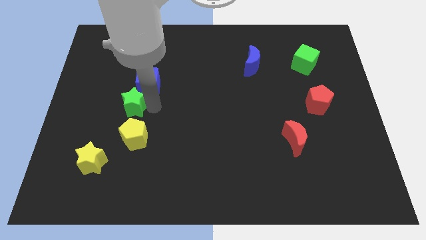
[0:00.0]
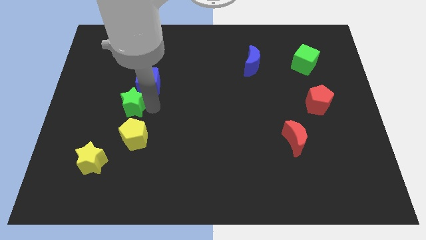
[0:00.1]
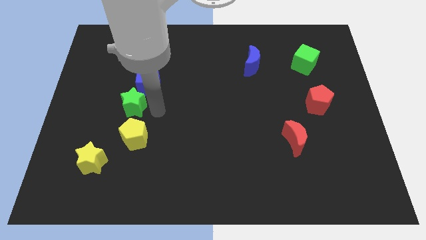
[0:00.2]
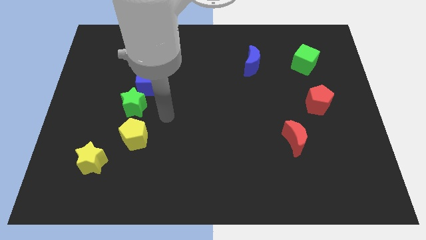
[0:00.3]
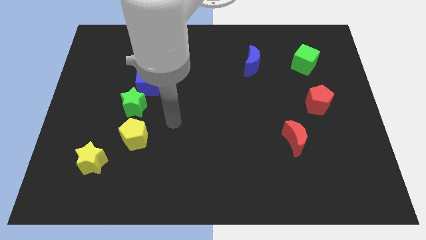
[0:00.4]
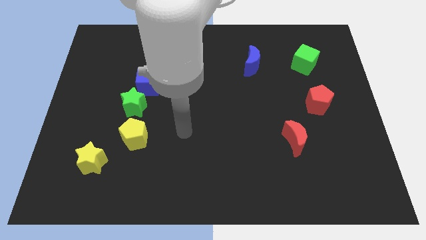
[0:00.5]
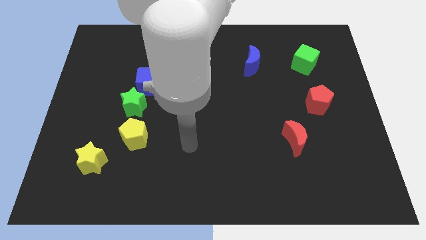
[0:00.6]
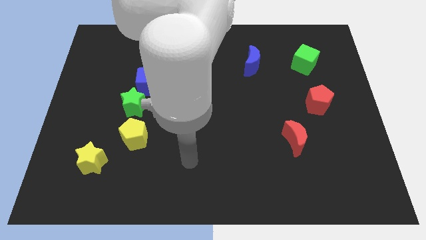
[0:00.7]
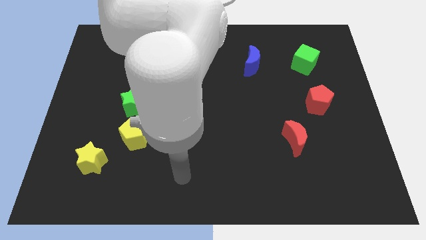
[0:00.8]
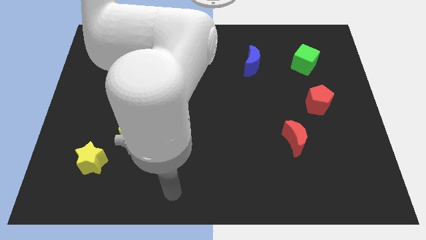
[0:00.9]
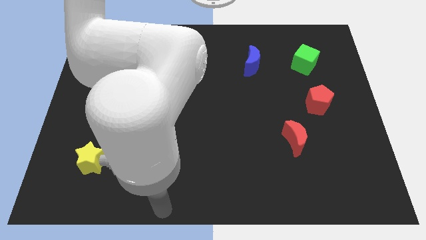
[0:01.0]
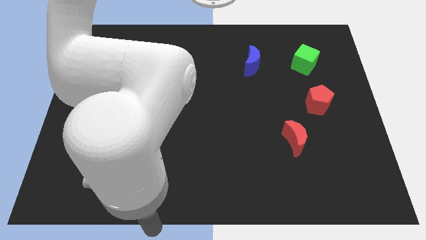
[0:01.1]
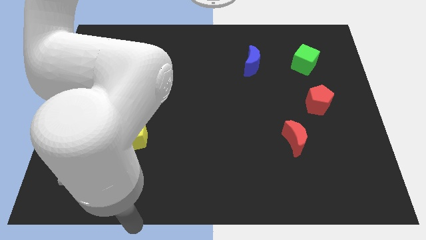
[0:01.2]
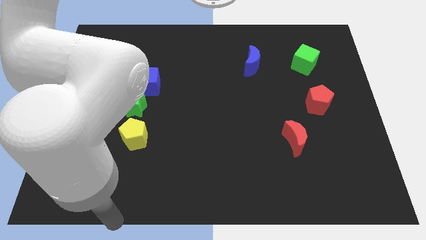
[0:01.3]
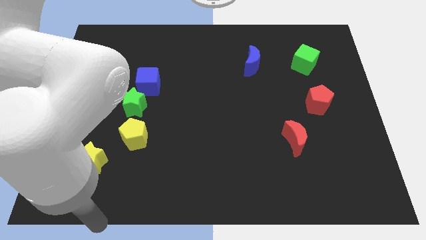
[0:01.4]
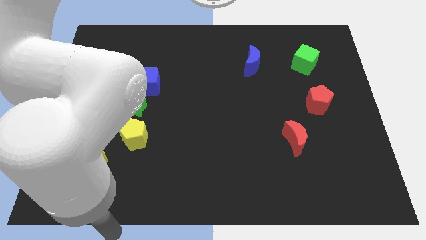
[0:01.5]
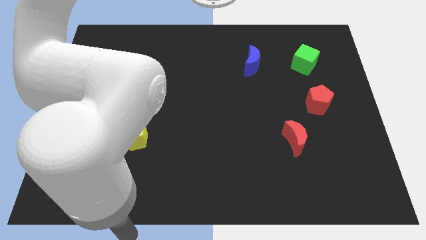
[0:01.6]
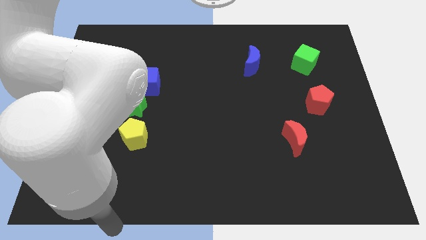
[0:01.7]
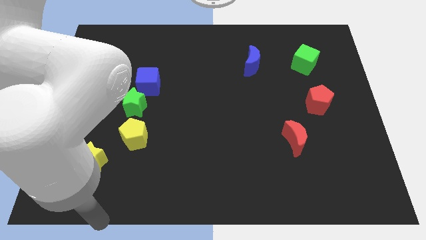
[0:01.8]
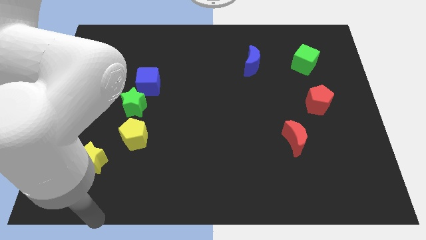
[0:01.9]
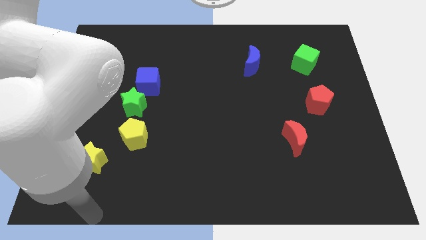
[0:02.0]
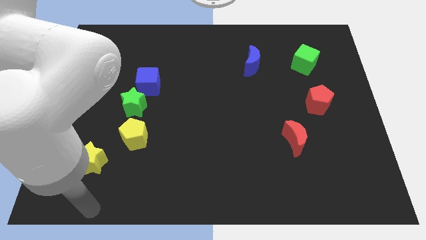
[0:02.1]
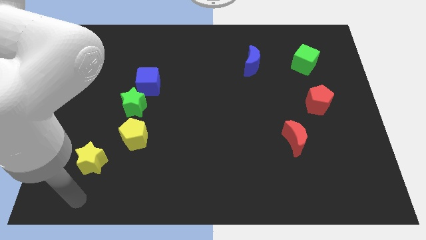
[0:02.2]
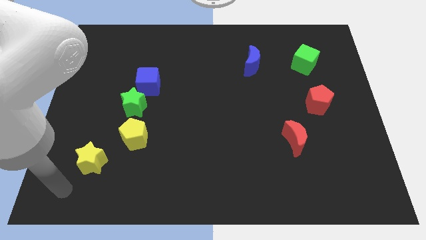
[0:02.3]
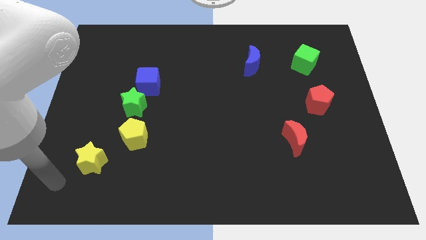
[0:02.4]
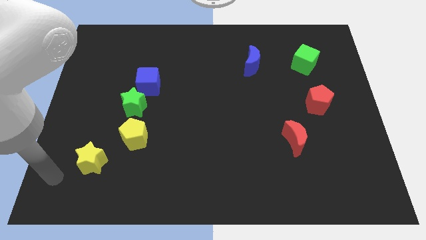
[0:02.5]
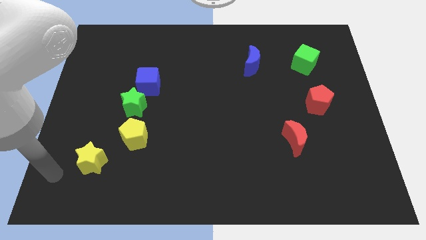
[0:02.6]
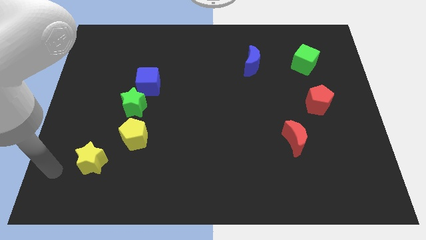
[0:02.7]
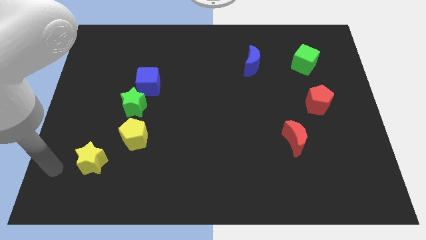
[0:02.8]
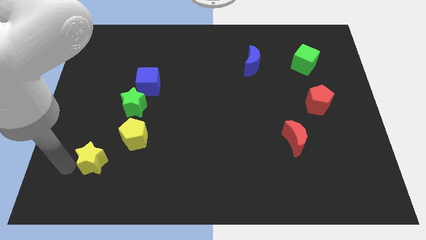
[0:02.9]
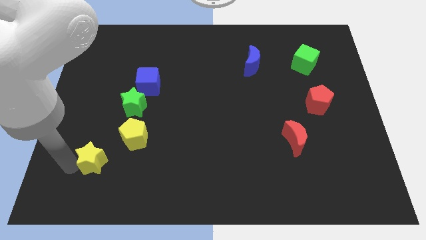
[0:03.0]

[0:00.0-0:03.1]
place your arm left to yellow star

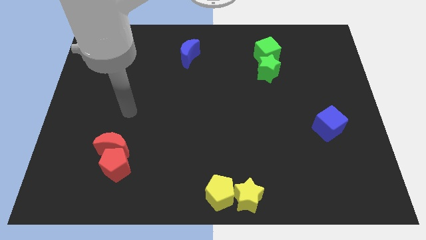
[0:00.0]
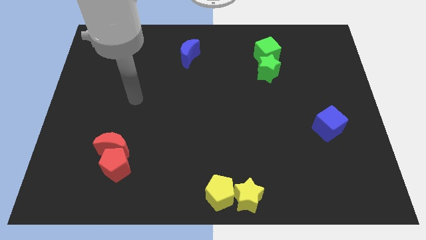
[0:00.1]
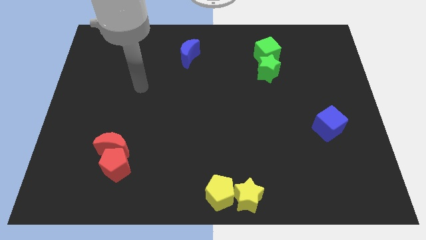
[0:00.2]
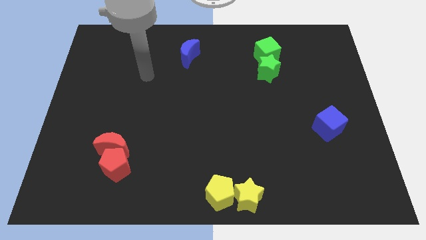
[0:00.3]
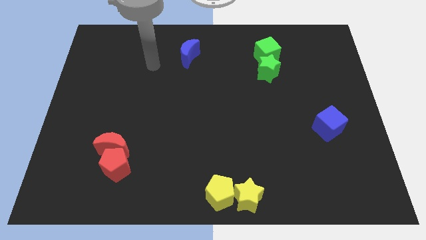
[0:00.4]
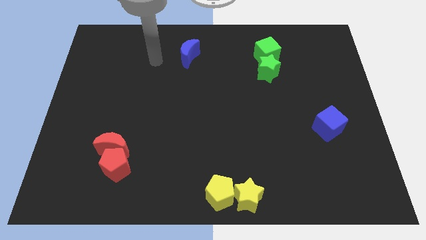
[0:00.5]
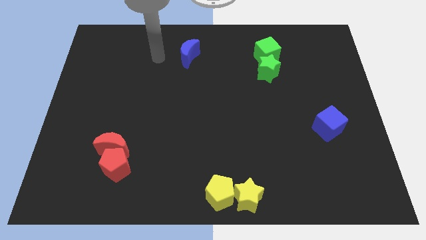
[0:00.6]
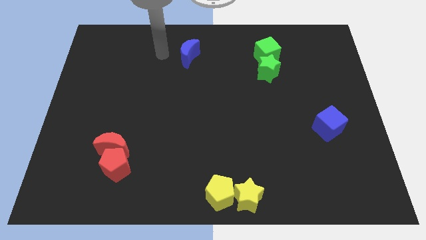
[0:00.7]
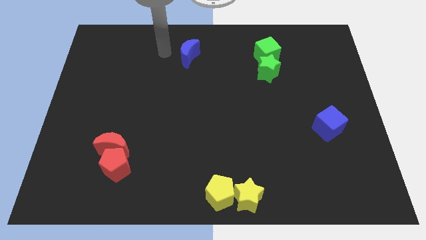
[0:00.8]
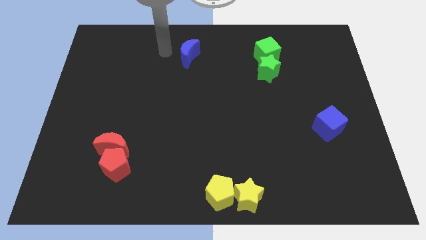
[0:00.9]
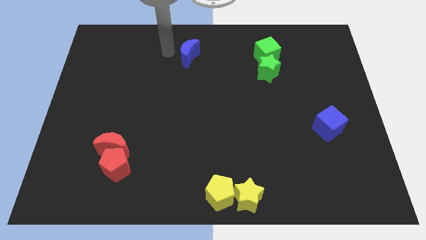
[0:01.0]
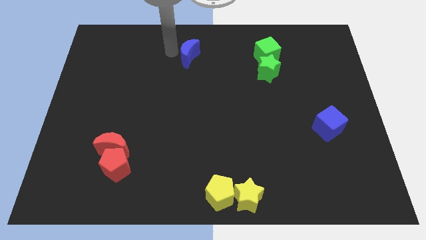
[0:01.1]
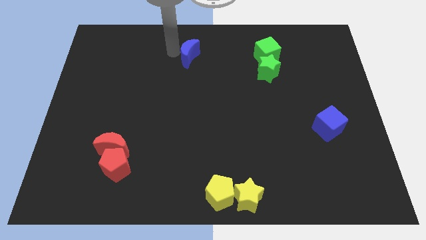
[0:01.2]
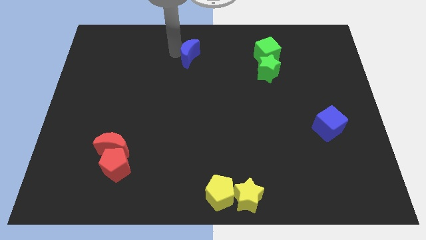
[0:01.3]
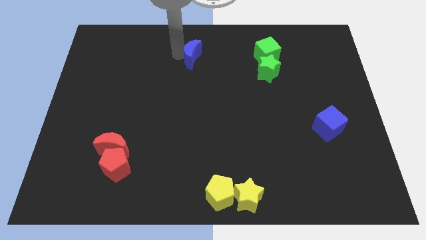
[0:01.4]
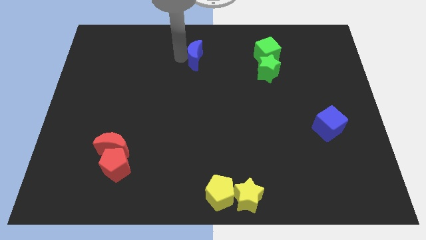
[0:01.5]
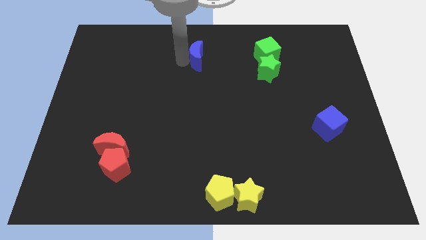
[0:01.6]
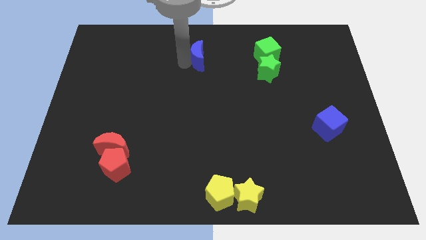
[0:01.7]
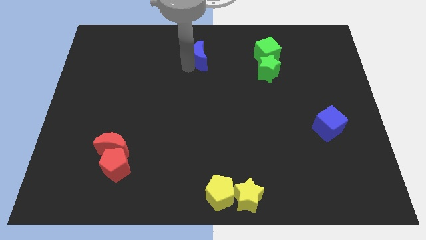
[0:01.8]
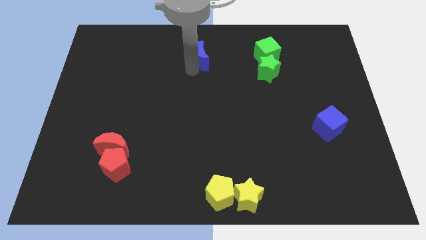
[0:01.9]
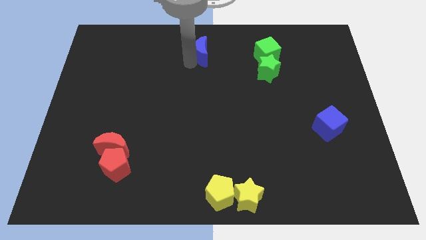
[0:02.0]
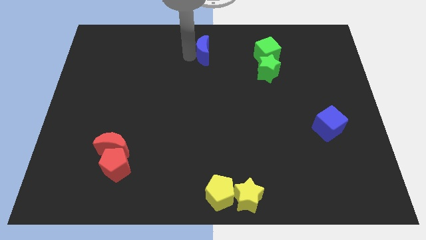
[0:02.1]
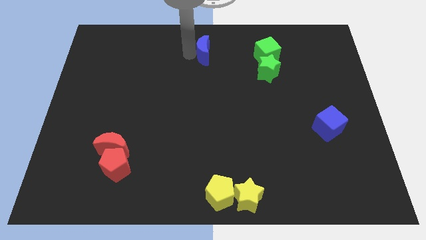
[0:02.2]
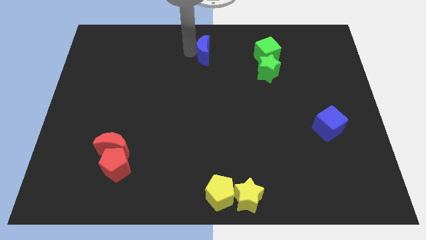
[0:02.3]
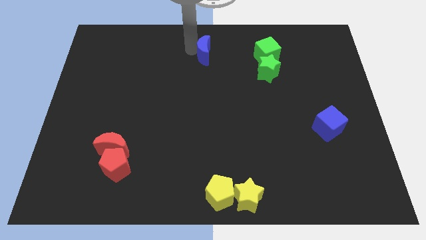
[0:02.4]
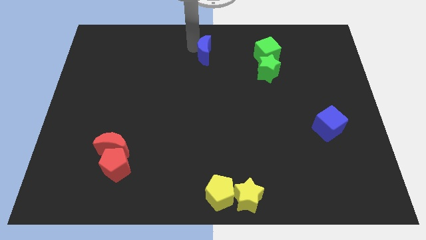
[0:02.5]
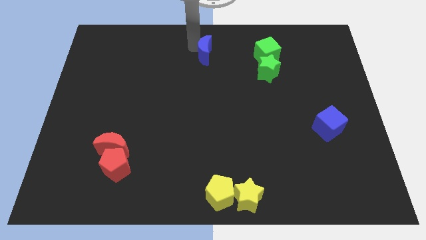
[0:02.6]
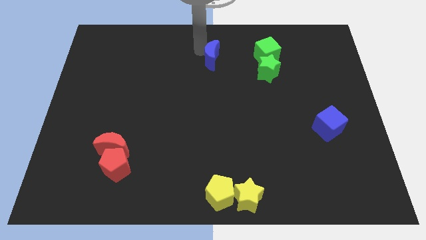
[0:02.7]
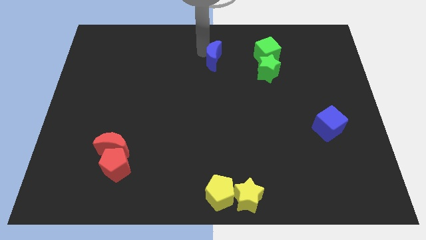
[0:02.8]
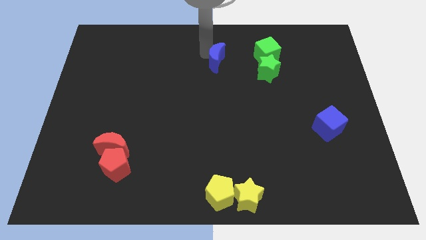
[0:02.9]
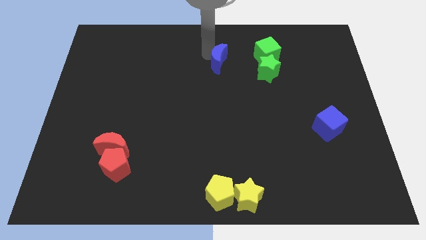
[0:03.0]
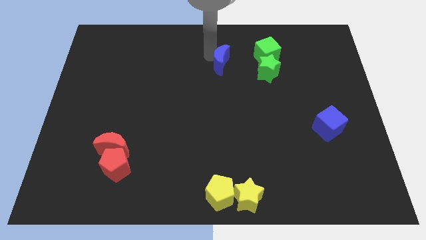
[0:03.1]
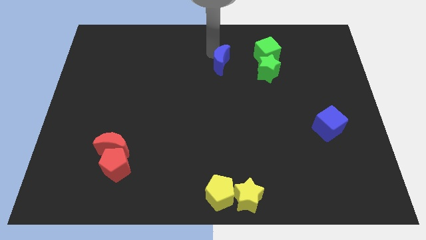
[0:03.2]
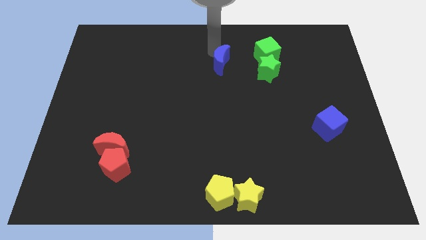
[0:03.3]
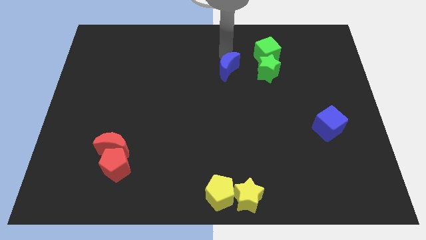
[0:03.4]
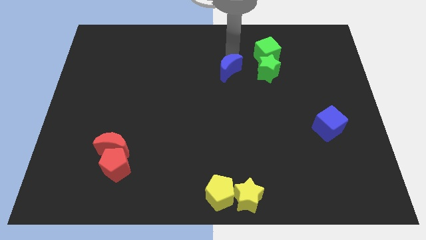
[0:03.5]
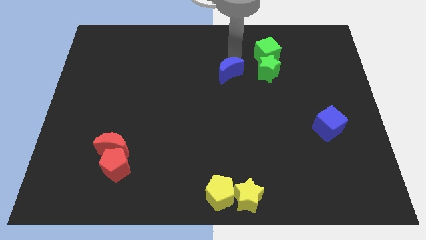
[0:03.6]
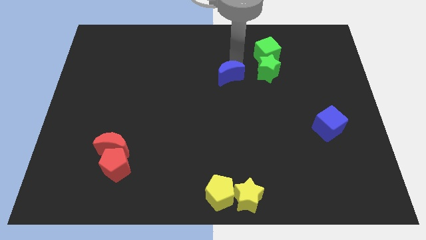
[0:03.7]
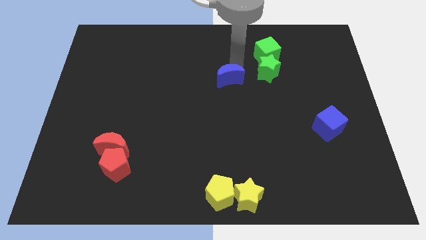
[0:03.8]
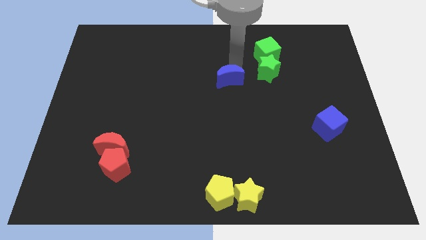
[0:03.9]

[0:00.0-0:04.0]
put the blue crescent to the left of the green star

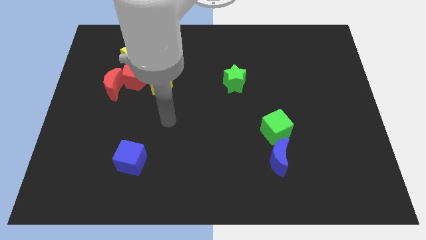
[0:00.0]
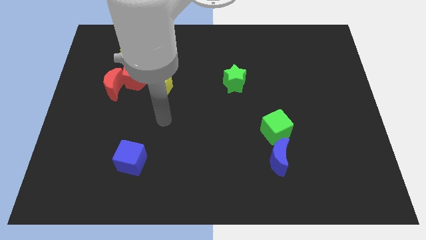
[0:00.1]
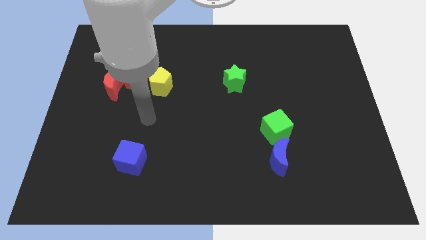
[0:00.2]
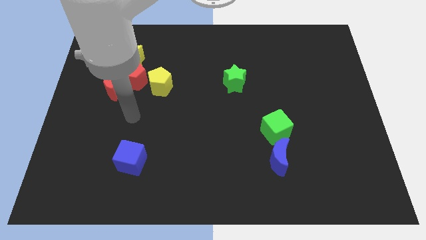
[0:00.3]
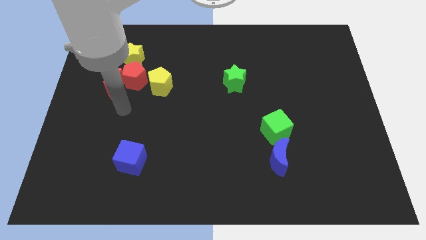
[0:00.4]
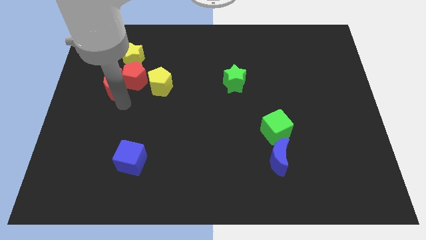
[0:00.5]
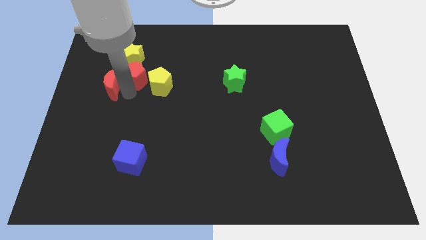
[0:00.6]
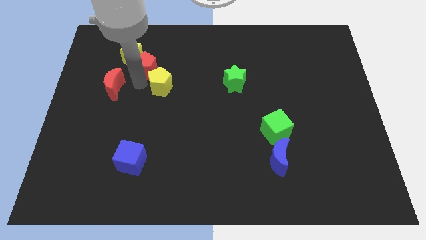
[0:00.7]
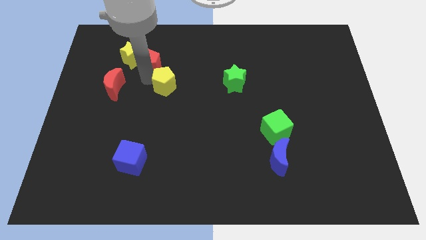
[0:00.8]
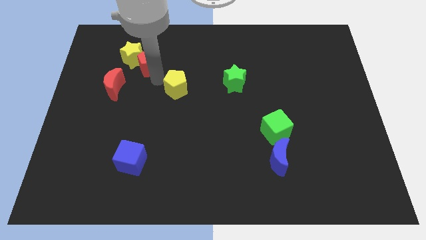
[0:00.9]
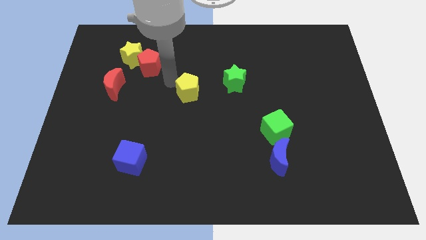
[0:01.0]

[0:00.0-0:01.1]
push red pentagon towards top of the board

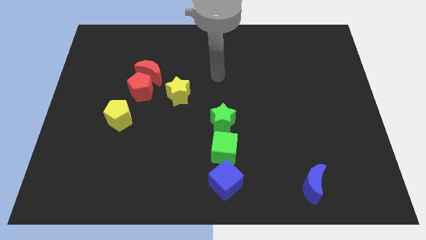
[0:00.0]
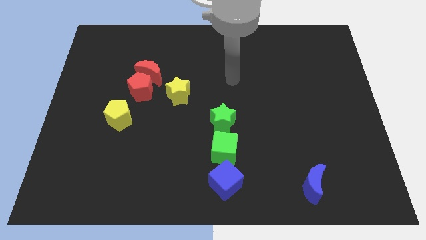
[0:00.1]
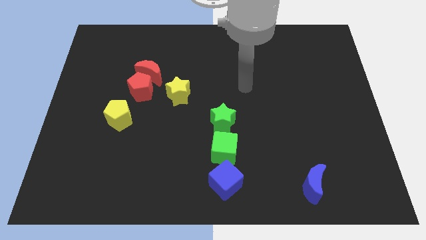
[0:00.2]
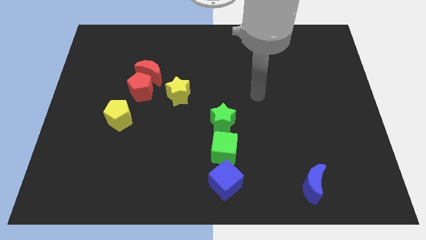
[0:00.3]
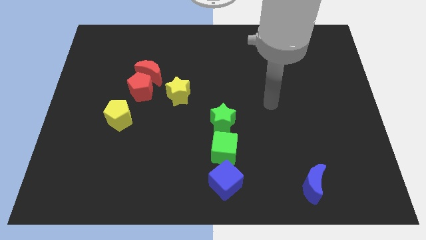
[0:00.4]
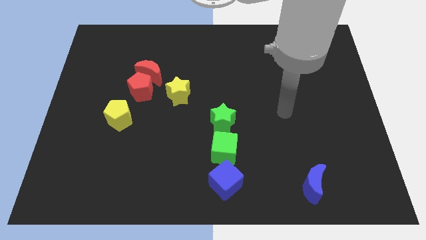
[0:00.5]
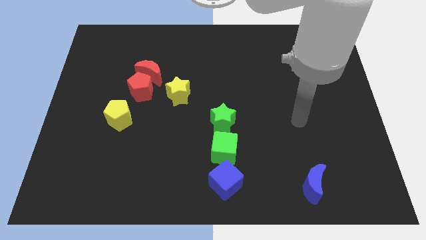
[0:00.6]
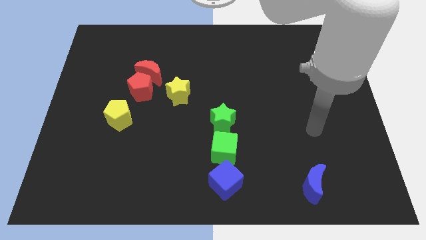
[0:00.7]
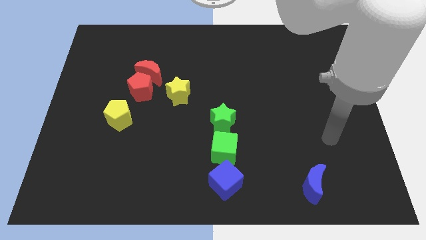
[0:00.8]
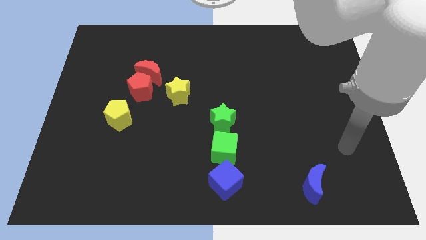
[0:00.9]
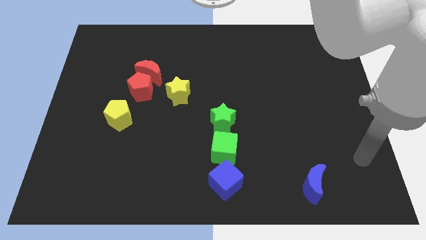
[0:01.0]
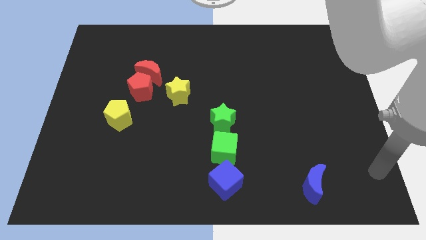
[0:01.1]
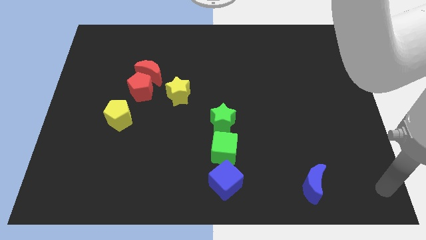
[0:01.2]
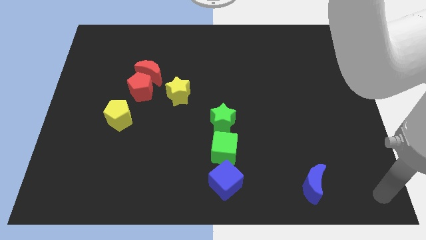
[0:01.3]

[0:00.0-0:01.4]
move your arm to the bottom right of the board
